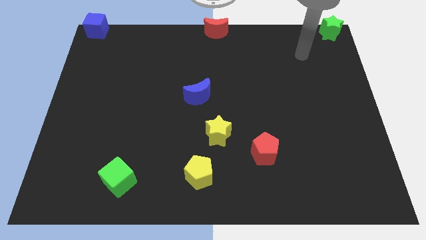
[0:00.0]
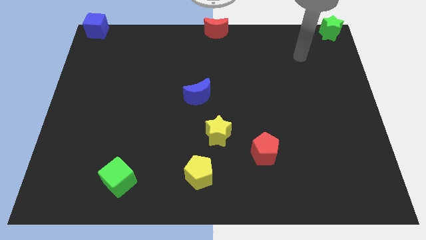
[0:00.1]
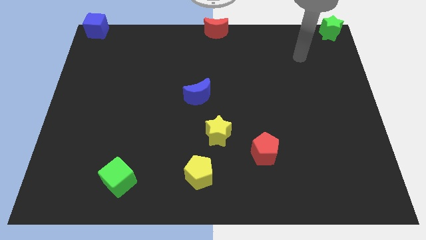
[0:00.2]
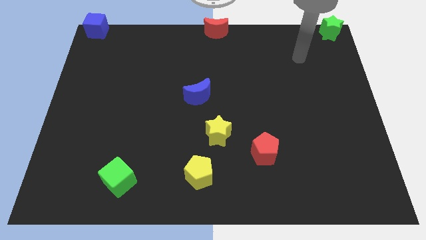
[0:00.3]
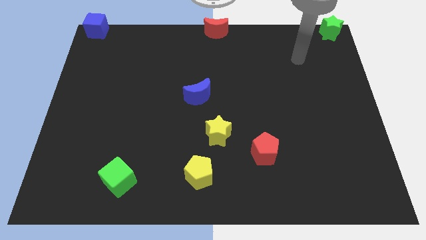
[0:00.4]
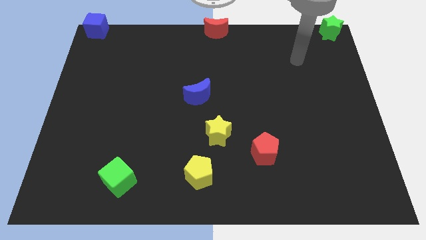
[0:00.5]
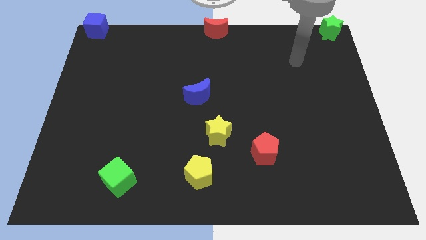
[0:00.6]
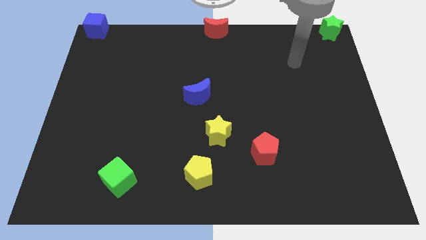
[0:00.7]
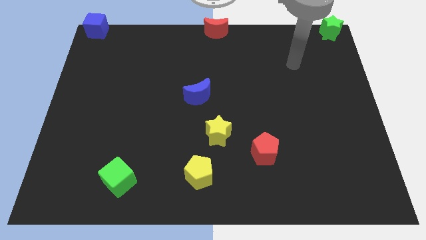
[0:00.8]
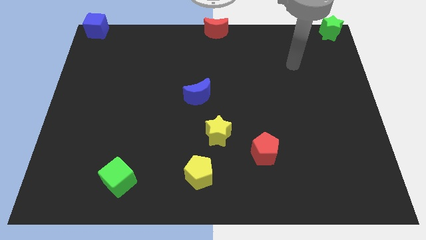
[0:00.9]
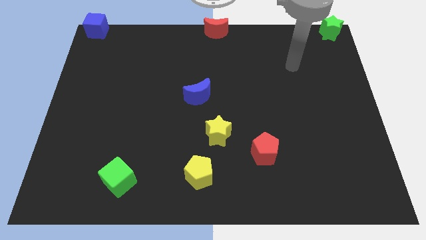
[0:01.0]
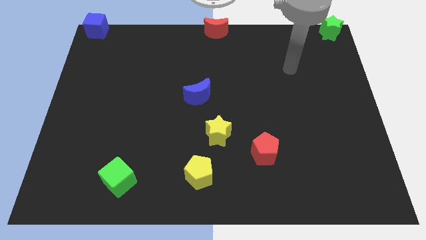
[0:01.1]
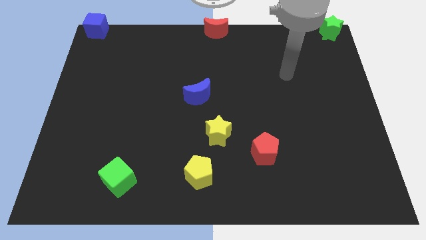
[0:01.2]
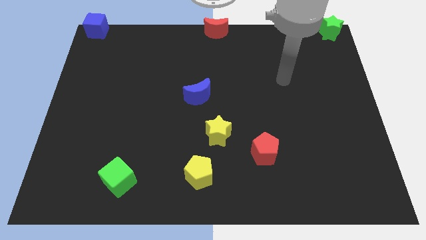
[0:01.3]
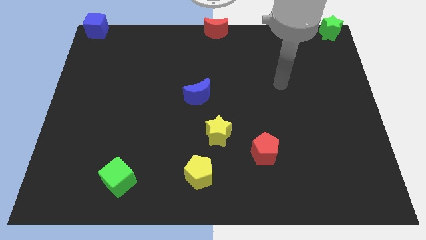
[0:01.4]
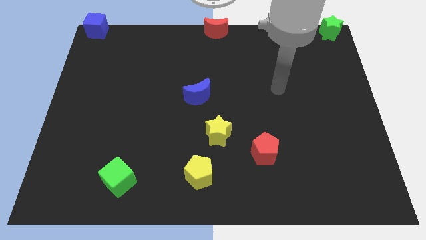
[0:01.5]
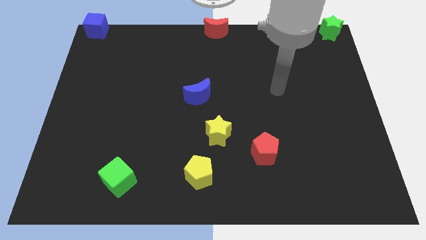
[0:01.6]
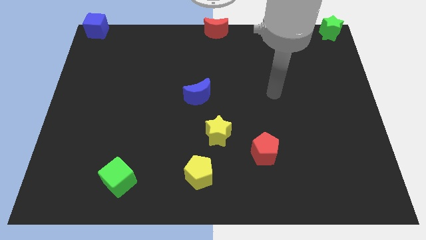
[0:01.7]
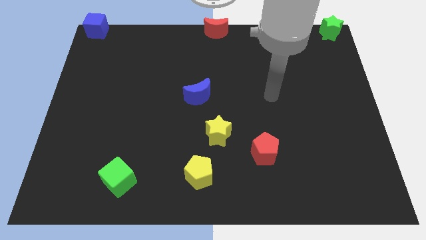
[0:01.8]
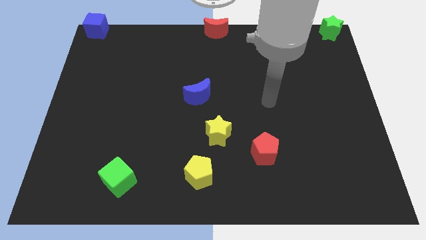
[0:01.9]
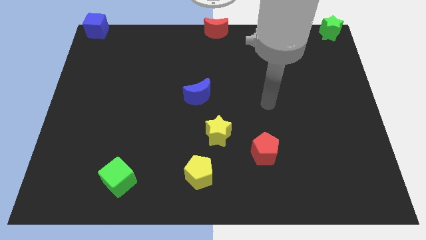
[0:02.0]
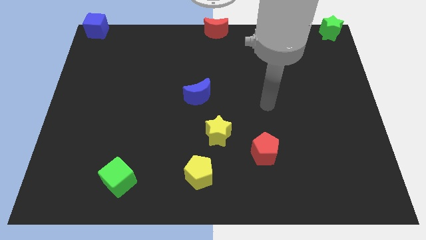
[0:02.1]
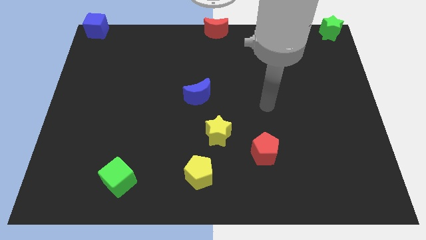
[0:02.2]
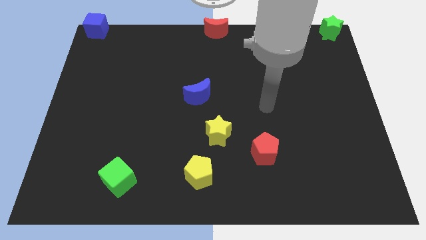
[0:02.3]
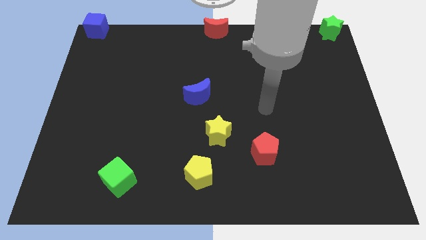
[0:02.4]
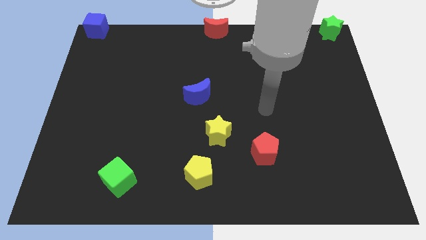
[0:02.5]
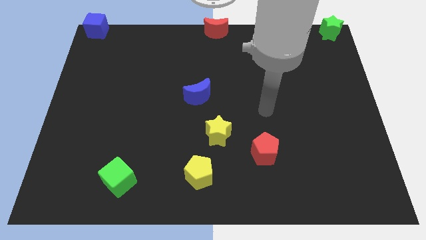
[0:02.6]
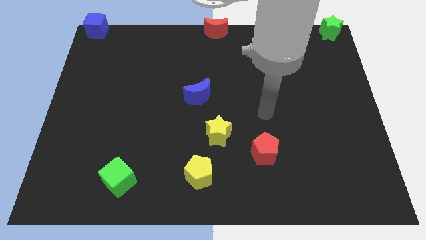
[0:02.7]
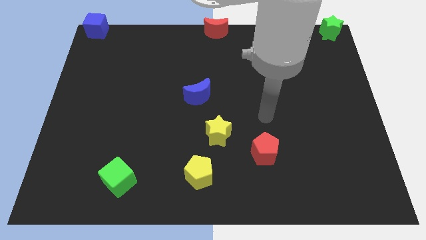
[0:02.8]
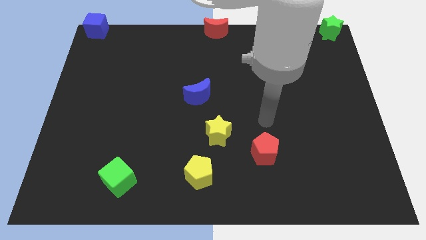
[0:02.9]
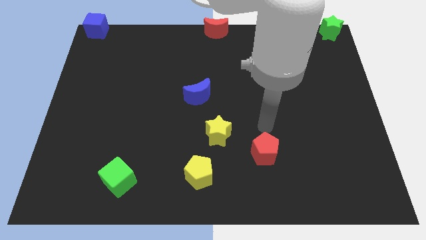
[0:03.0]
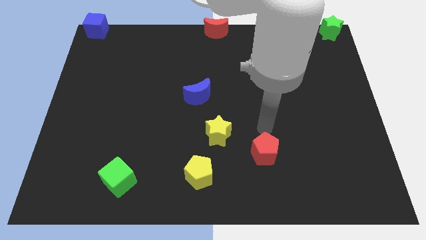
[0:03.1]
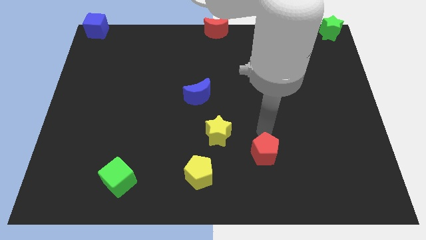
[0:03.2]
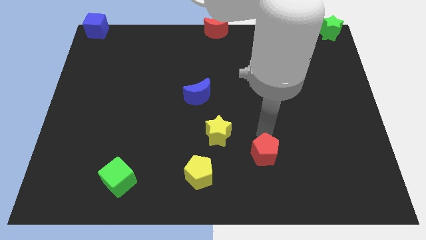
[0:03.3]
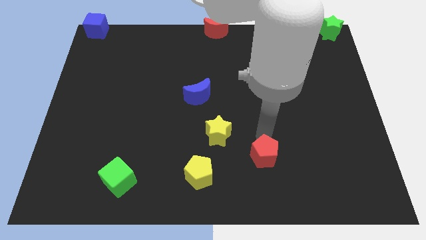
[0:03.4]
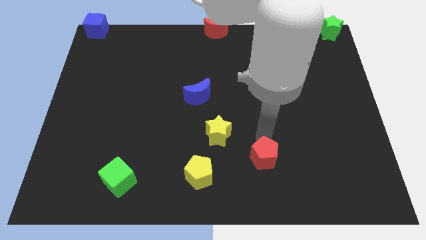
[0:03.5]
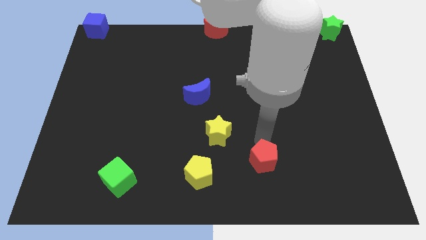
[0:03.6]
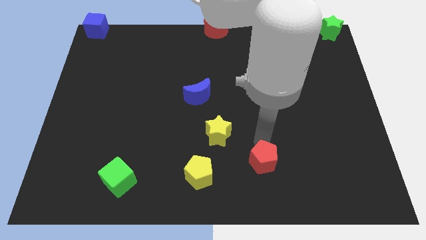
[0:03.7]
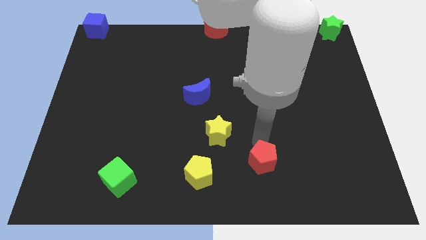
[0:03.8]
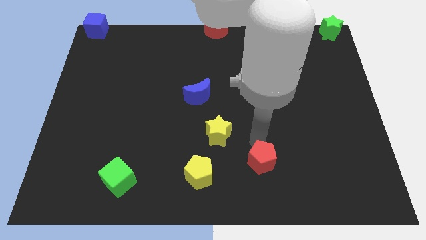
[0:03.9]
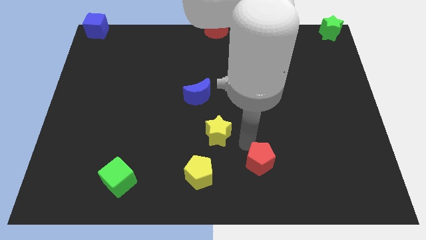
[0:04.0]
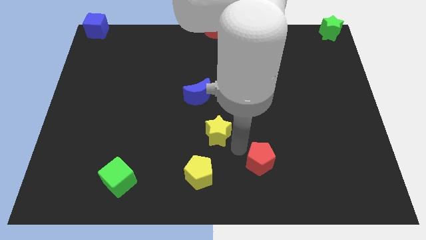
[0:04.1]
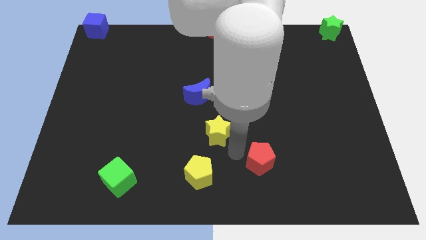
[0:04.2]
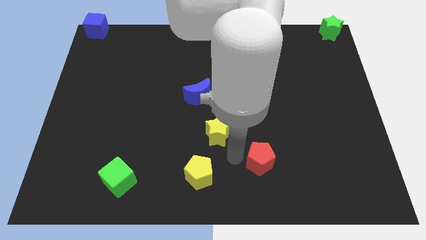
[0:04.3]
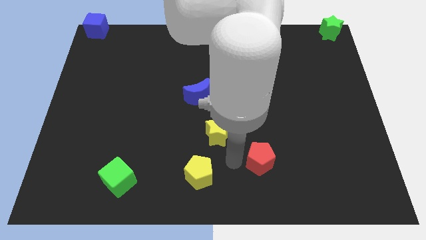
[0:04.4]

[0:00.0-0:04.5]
move the red pentagon slightly to the bottom side of the board

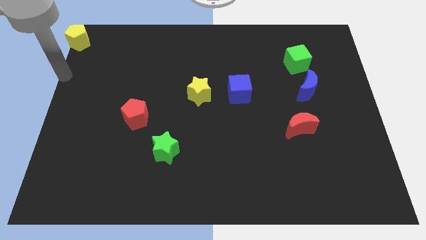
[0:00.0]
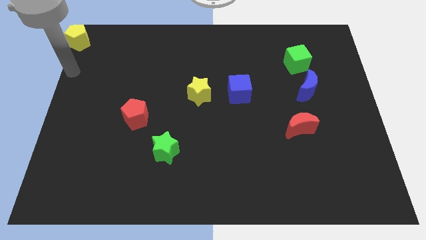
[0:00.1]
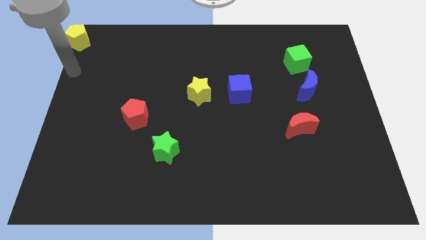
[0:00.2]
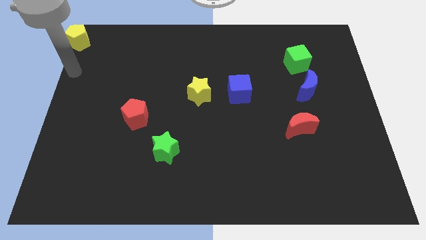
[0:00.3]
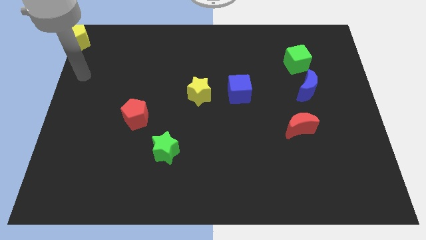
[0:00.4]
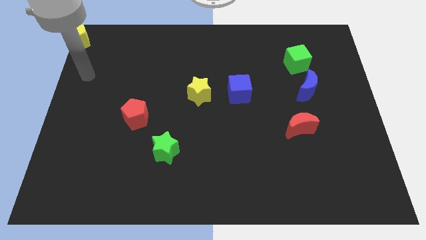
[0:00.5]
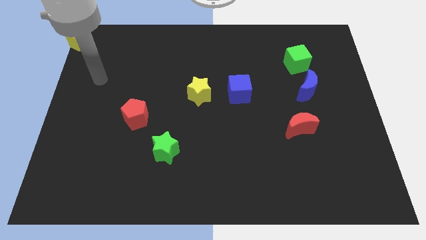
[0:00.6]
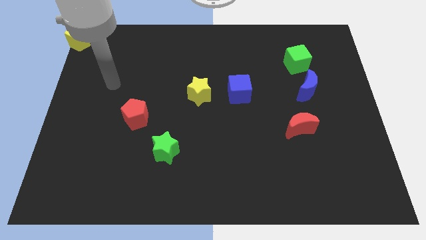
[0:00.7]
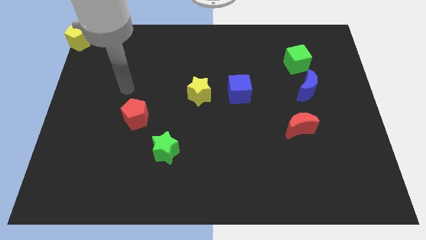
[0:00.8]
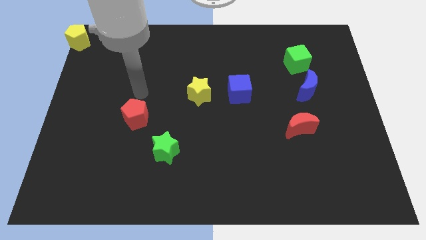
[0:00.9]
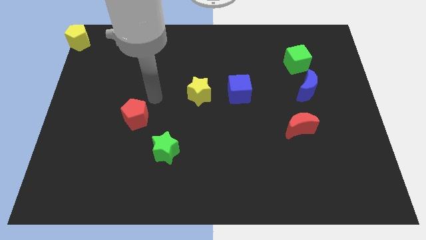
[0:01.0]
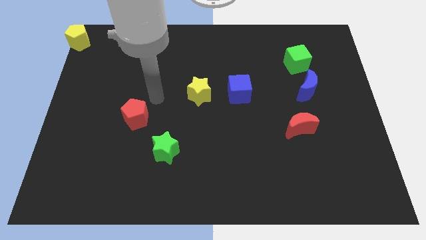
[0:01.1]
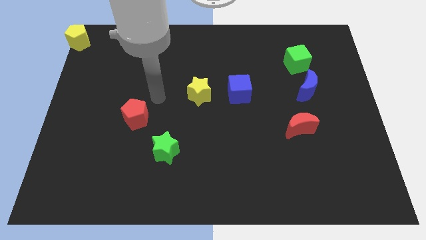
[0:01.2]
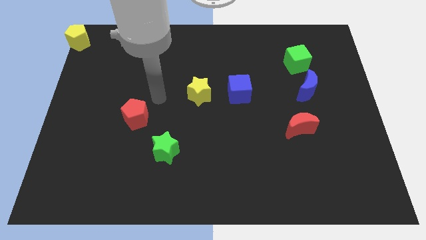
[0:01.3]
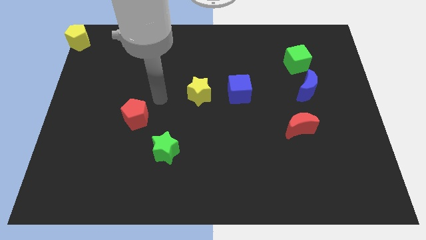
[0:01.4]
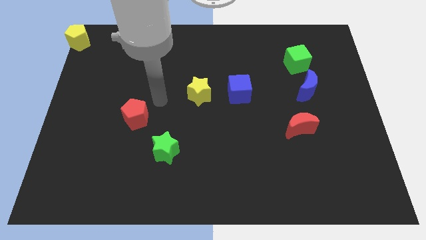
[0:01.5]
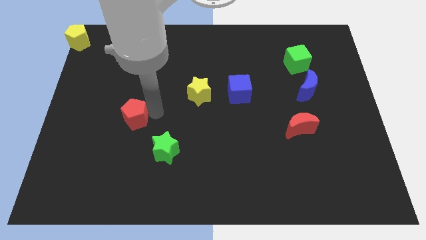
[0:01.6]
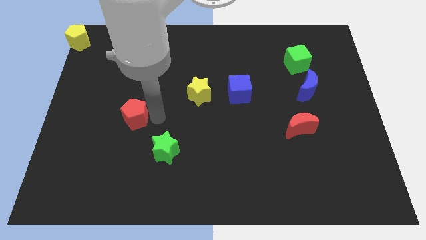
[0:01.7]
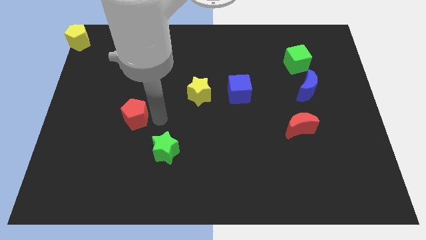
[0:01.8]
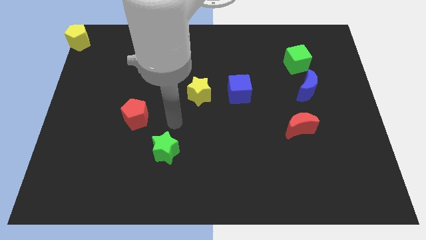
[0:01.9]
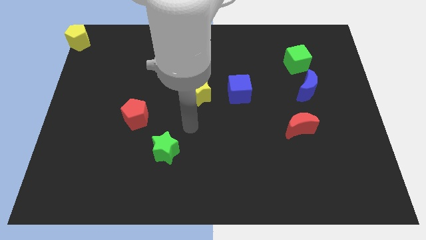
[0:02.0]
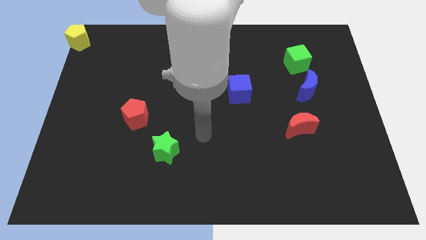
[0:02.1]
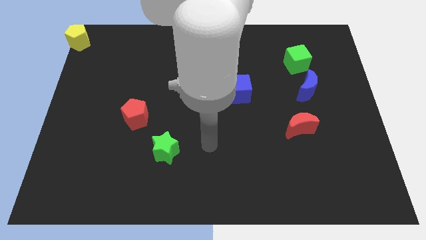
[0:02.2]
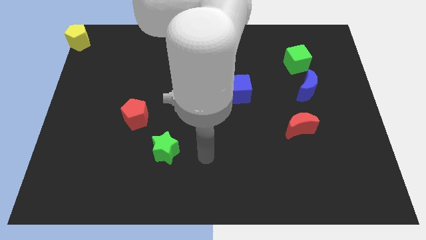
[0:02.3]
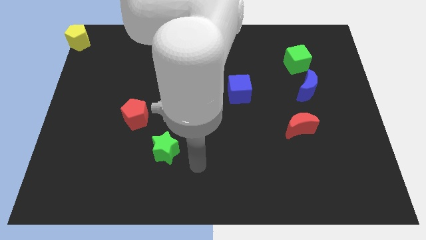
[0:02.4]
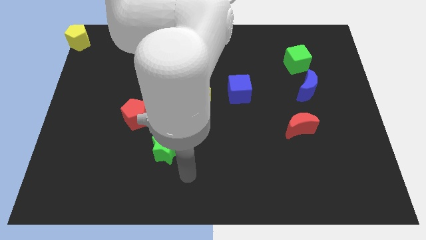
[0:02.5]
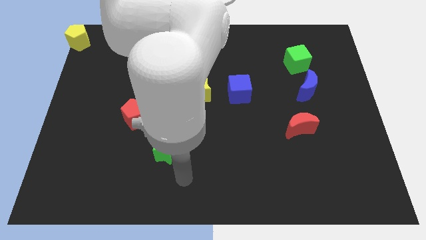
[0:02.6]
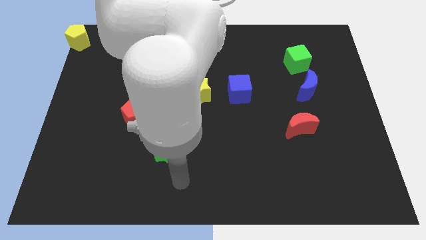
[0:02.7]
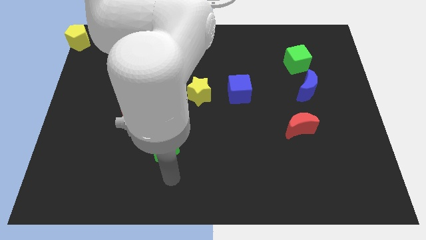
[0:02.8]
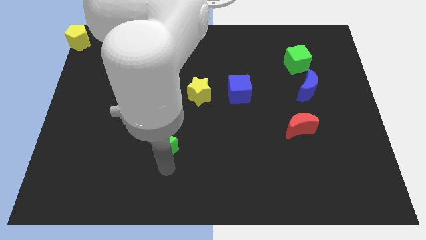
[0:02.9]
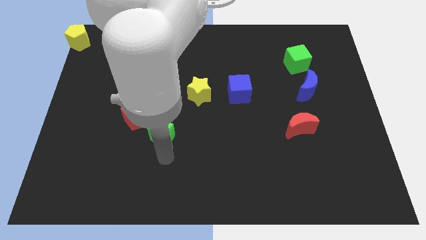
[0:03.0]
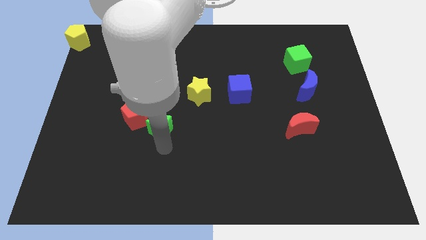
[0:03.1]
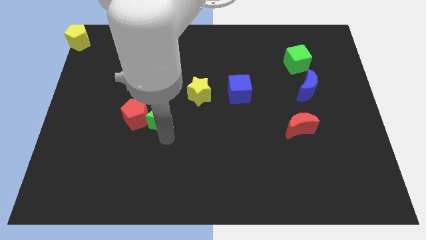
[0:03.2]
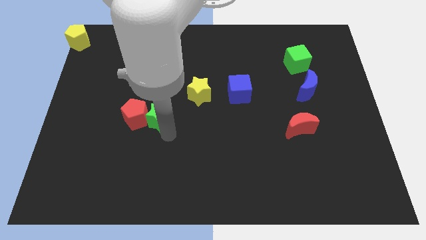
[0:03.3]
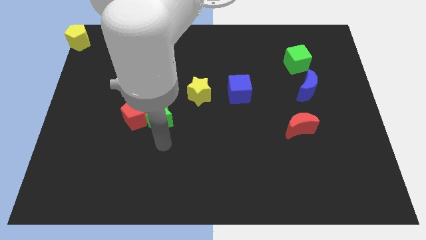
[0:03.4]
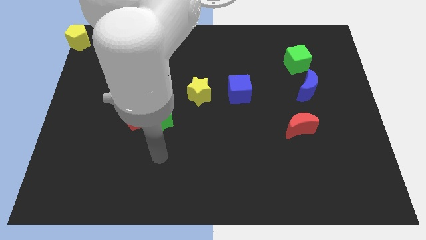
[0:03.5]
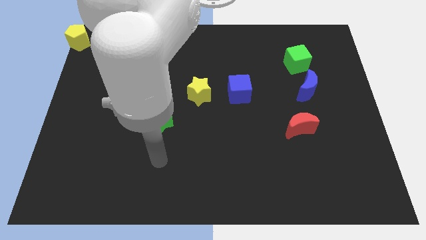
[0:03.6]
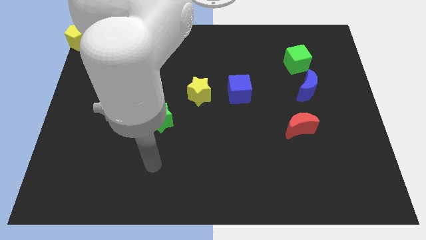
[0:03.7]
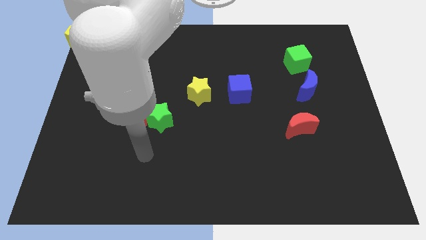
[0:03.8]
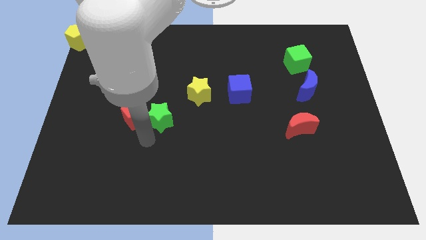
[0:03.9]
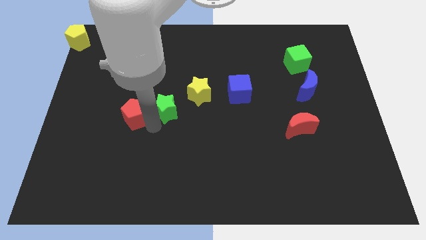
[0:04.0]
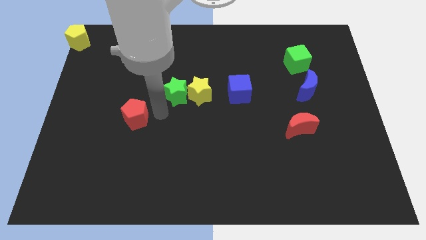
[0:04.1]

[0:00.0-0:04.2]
move the green star to the right of the red pentagon

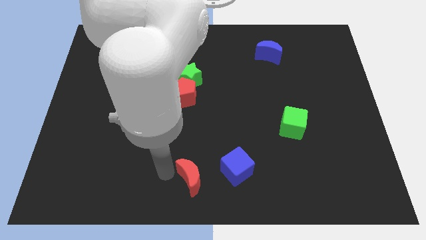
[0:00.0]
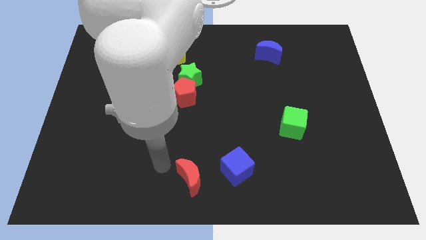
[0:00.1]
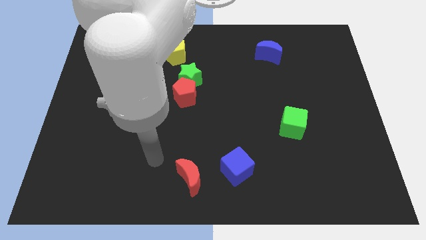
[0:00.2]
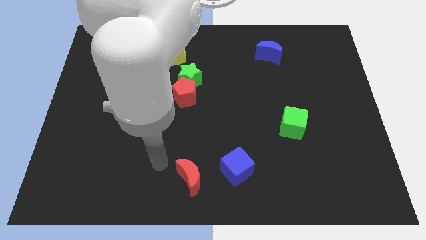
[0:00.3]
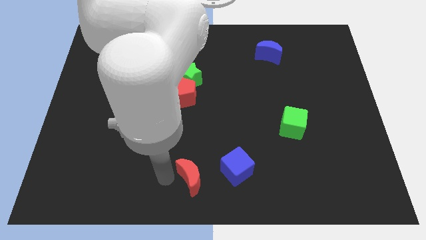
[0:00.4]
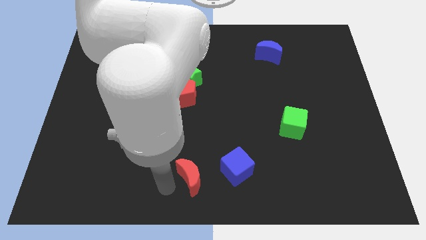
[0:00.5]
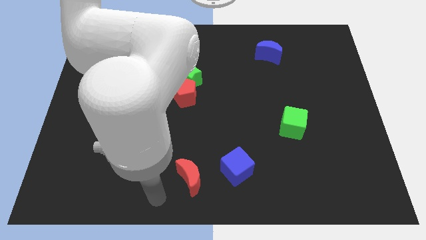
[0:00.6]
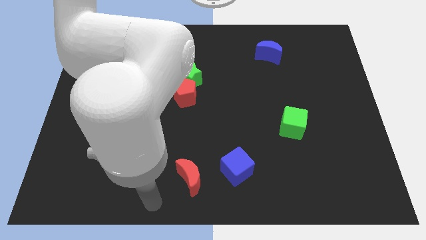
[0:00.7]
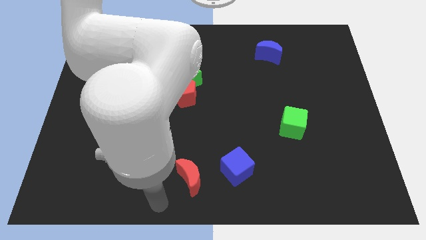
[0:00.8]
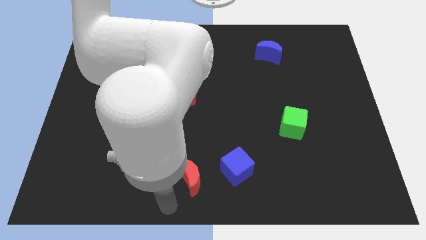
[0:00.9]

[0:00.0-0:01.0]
point your hand at the left of the red crescent
